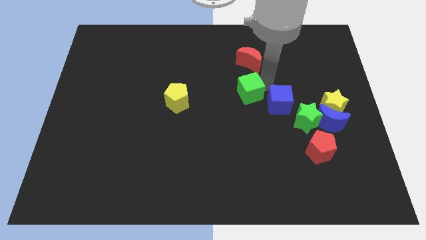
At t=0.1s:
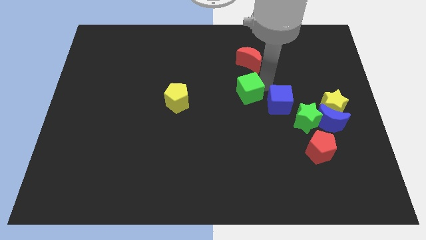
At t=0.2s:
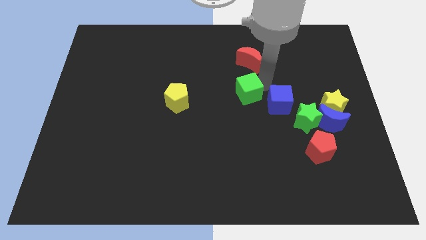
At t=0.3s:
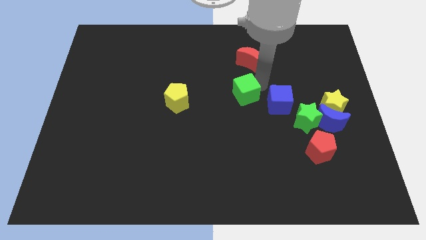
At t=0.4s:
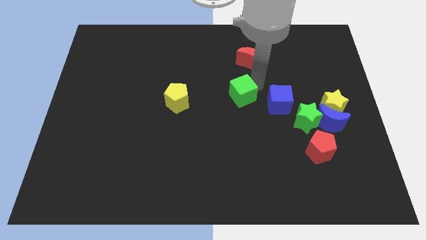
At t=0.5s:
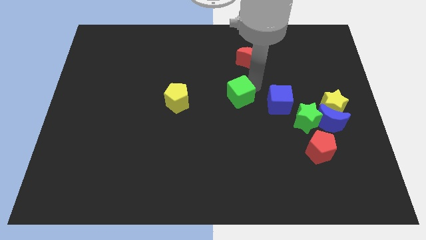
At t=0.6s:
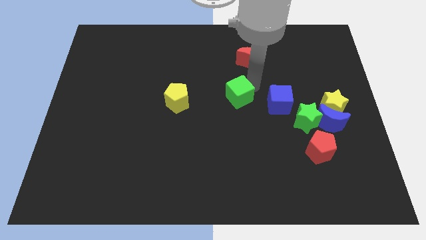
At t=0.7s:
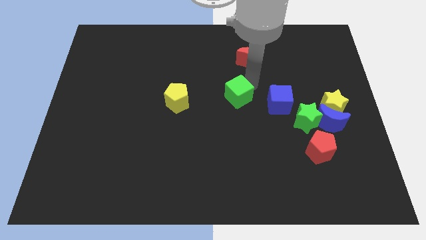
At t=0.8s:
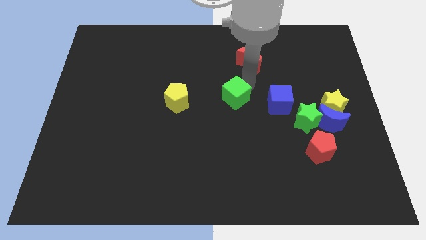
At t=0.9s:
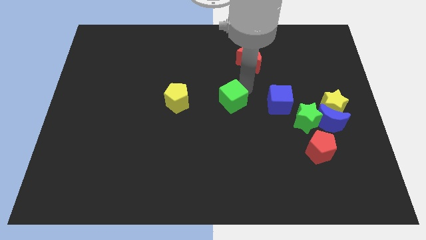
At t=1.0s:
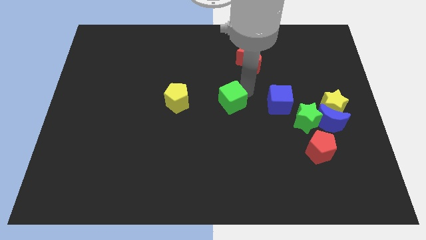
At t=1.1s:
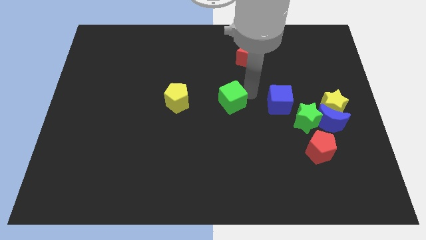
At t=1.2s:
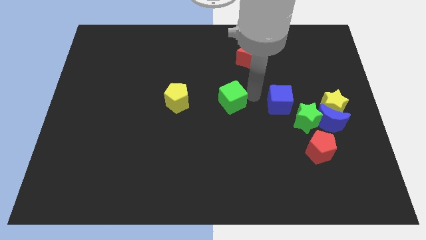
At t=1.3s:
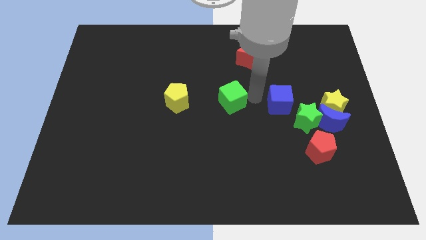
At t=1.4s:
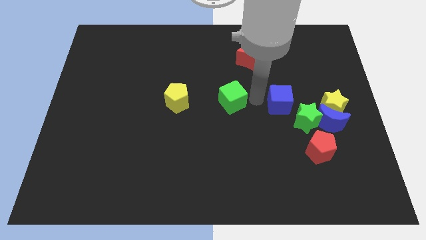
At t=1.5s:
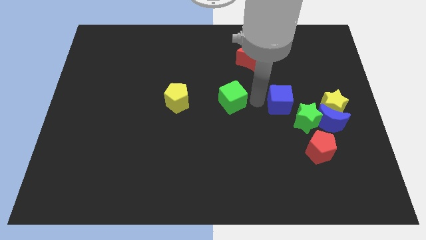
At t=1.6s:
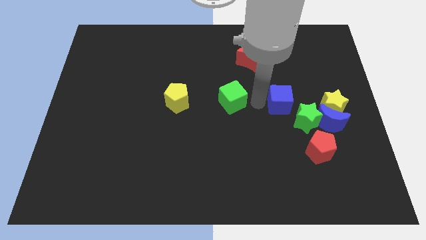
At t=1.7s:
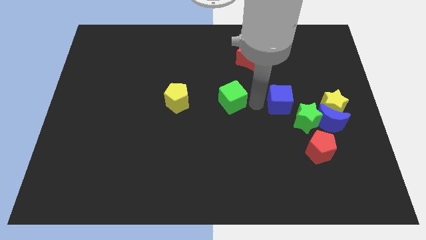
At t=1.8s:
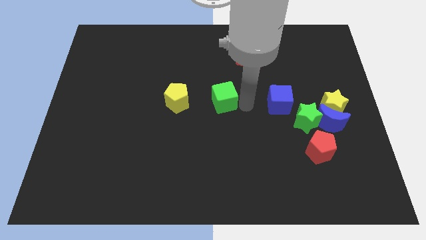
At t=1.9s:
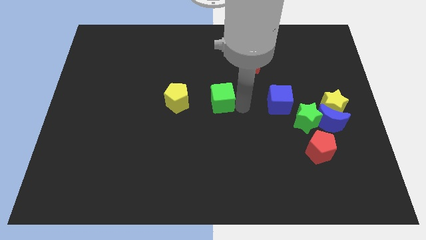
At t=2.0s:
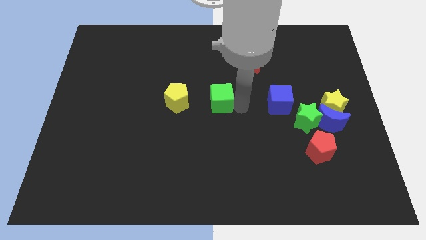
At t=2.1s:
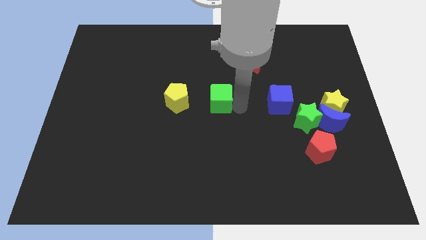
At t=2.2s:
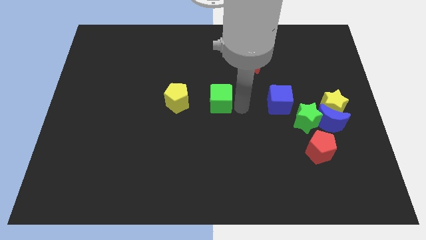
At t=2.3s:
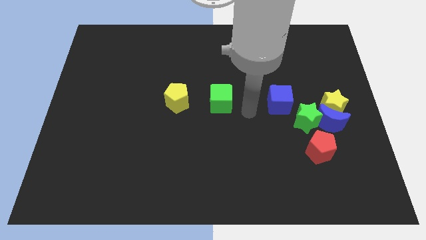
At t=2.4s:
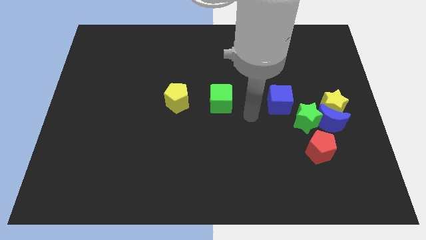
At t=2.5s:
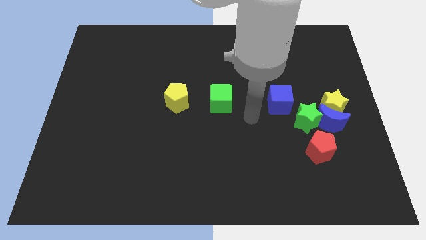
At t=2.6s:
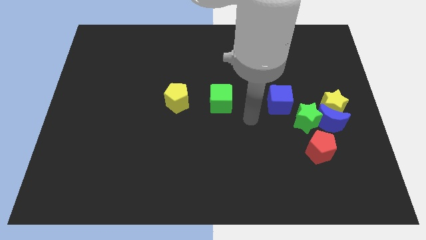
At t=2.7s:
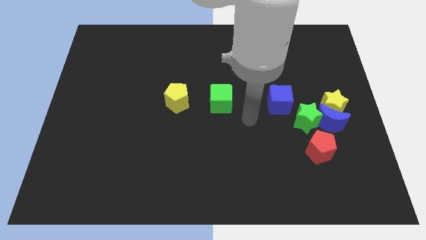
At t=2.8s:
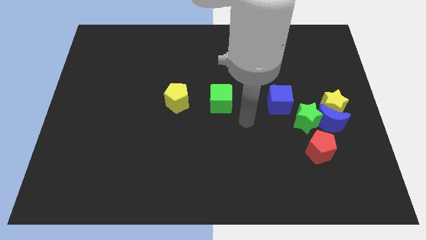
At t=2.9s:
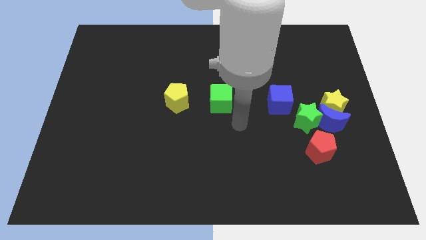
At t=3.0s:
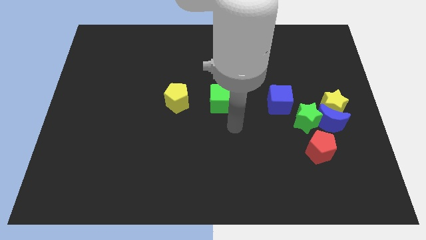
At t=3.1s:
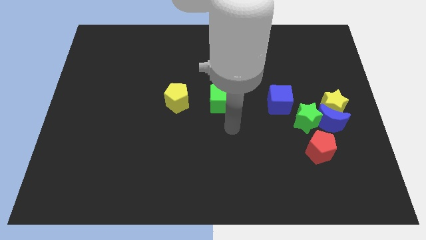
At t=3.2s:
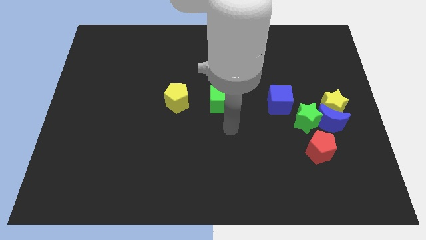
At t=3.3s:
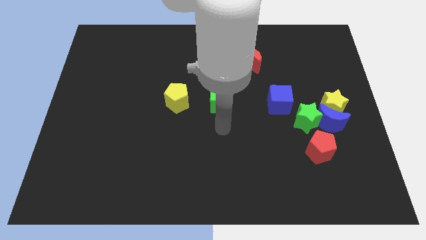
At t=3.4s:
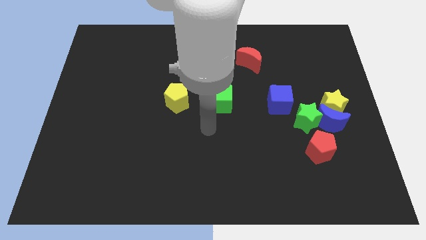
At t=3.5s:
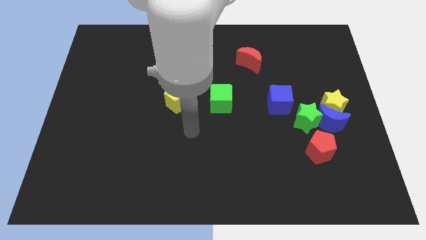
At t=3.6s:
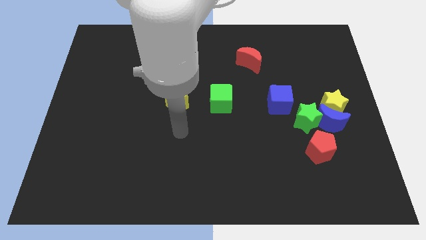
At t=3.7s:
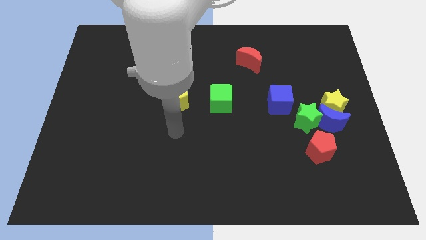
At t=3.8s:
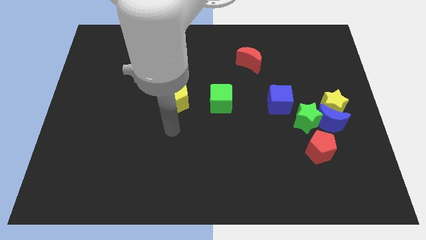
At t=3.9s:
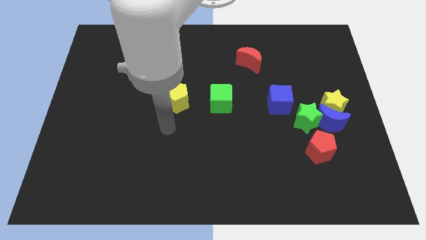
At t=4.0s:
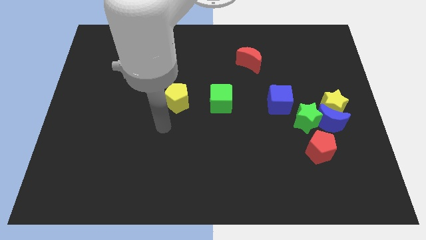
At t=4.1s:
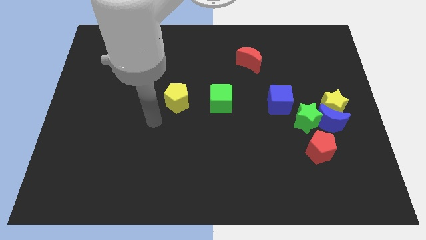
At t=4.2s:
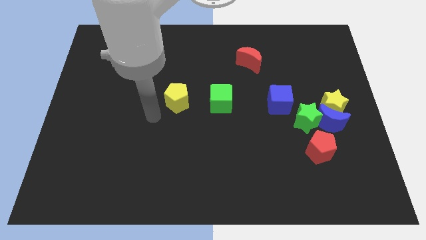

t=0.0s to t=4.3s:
push the green cube to the center of the board

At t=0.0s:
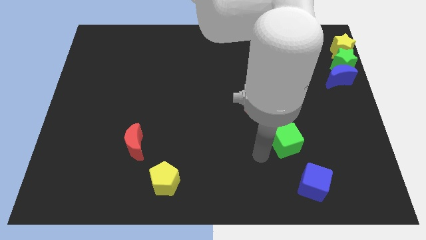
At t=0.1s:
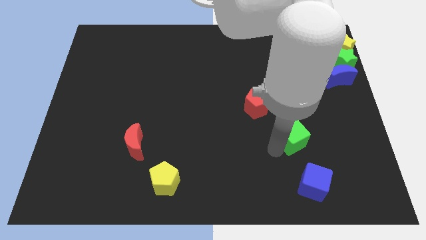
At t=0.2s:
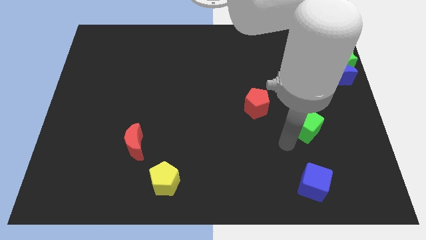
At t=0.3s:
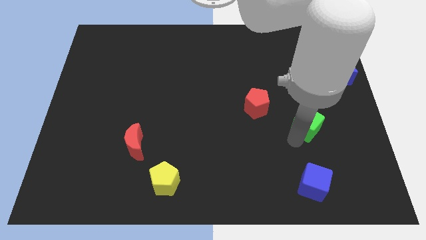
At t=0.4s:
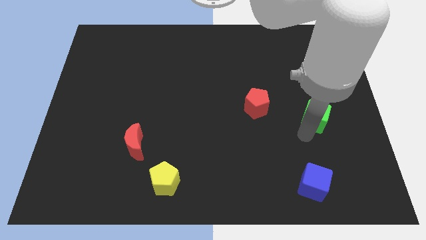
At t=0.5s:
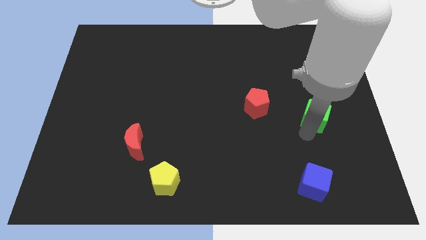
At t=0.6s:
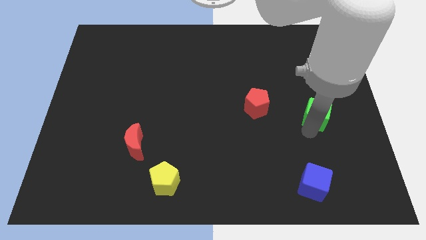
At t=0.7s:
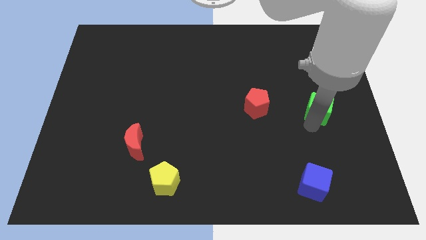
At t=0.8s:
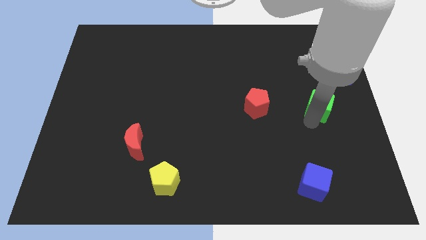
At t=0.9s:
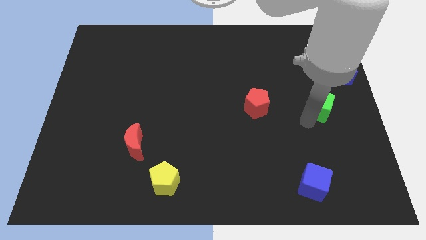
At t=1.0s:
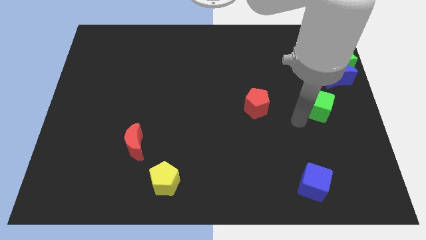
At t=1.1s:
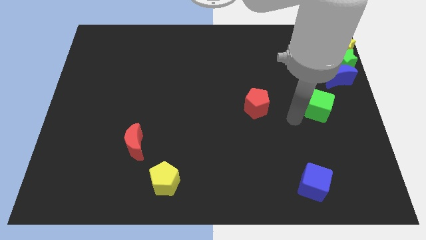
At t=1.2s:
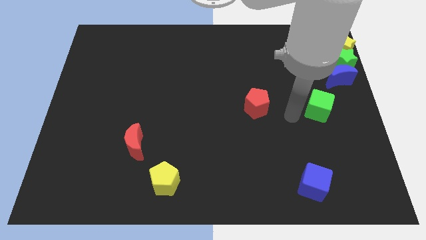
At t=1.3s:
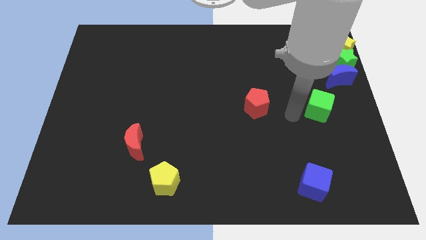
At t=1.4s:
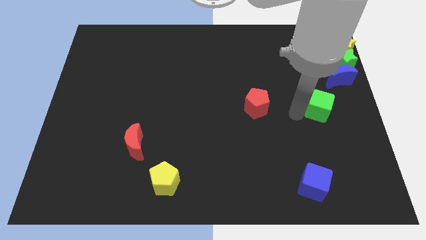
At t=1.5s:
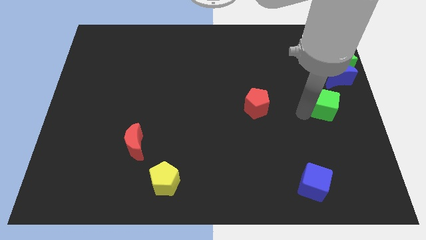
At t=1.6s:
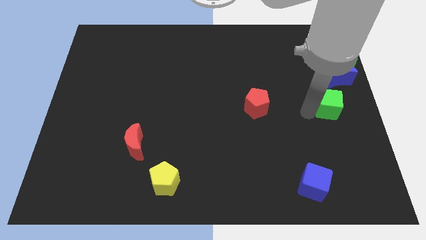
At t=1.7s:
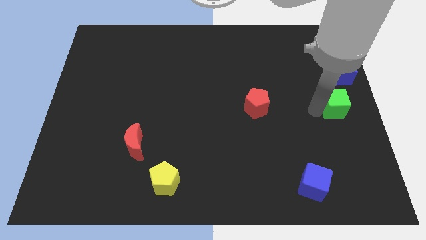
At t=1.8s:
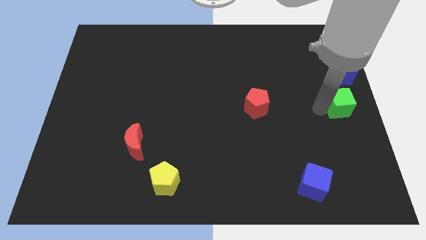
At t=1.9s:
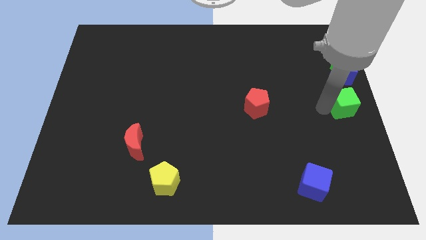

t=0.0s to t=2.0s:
place green cube below the blue crescent

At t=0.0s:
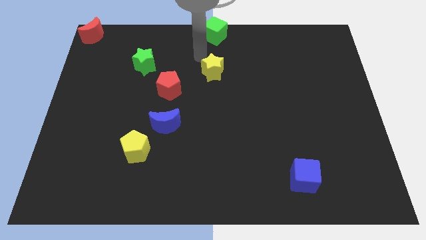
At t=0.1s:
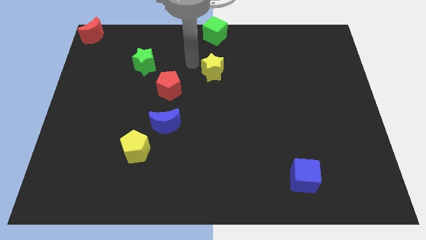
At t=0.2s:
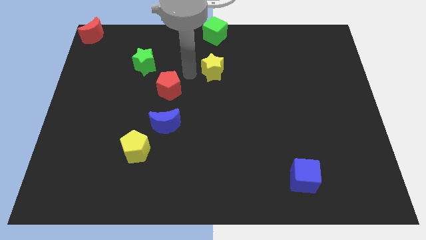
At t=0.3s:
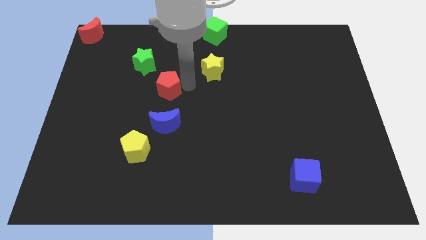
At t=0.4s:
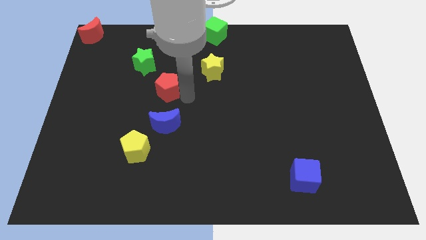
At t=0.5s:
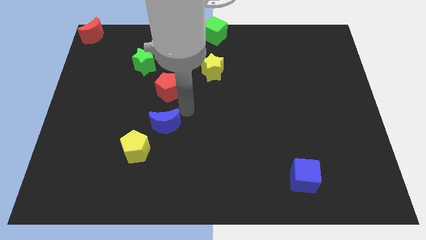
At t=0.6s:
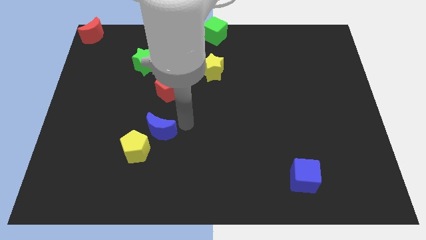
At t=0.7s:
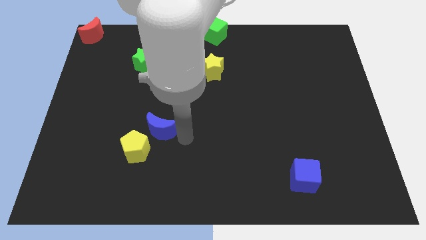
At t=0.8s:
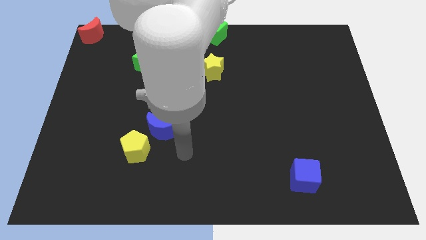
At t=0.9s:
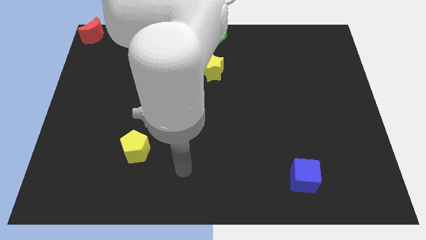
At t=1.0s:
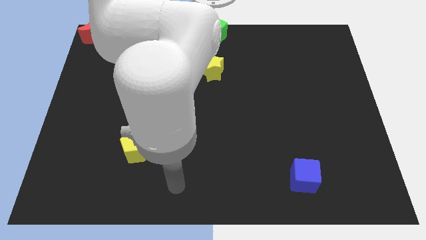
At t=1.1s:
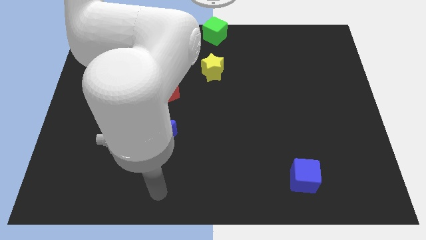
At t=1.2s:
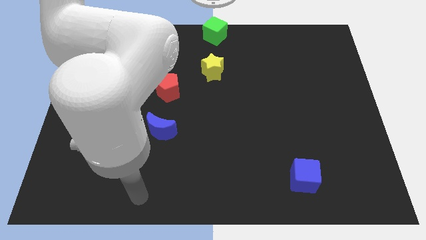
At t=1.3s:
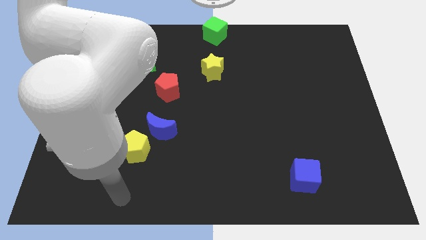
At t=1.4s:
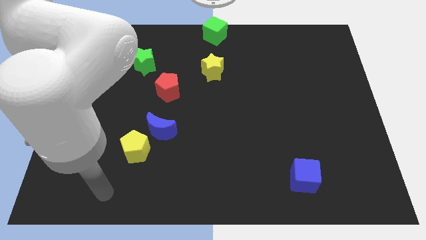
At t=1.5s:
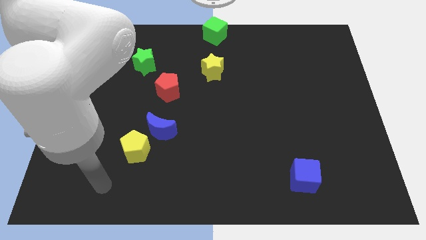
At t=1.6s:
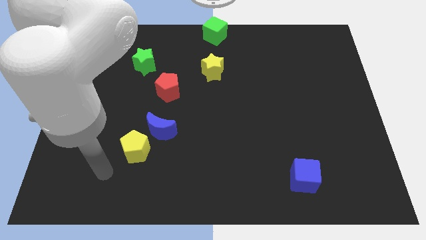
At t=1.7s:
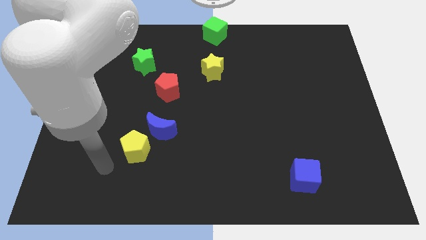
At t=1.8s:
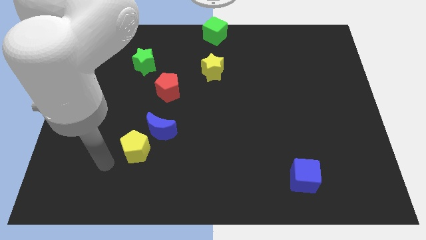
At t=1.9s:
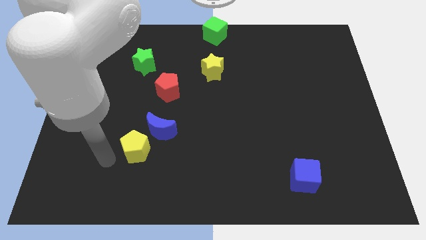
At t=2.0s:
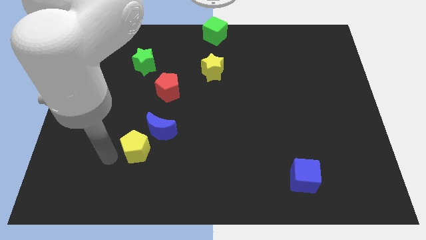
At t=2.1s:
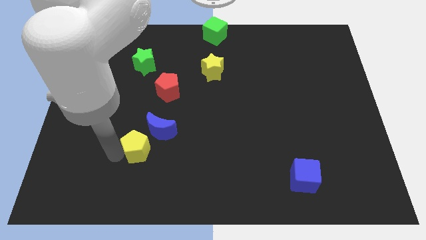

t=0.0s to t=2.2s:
touch the left side of the yellow pentagon

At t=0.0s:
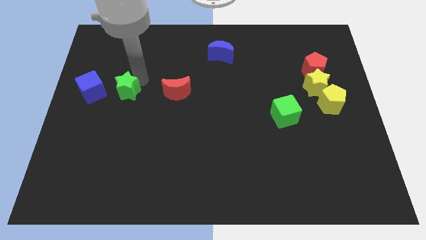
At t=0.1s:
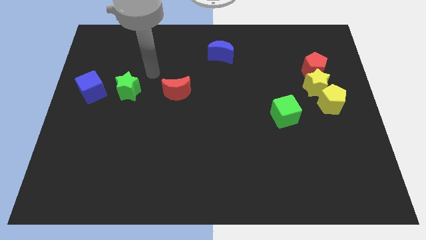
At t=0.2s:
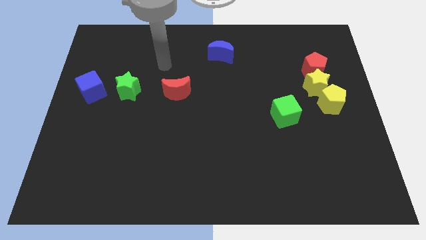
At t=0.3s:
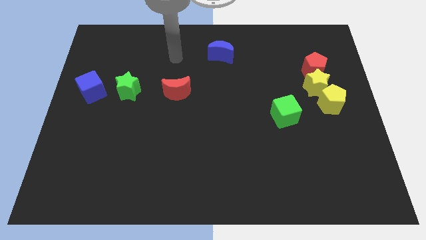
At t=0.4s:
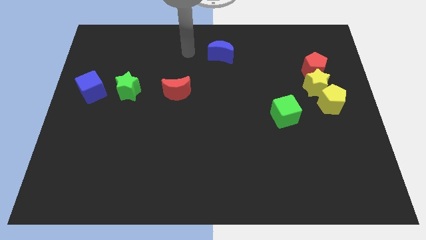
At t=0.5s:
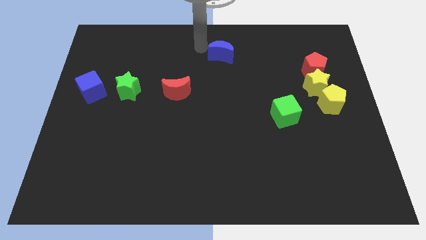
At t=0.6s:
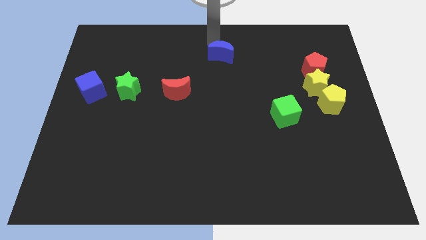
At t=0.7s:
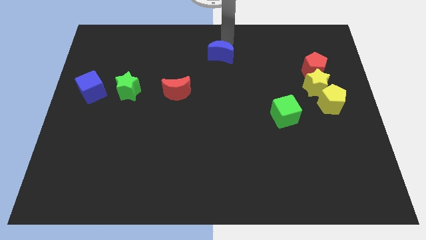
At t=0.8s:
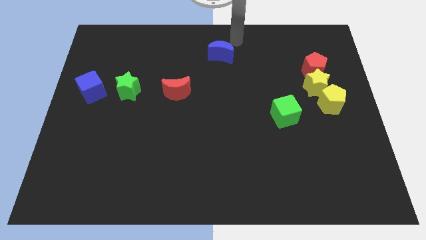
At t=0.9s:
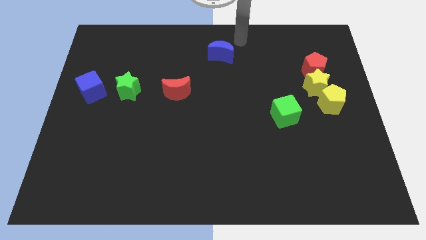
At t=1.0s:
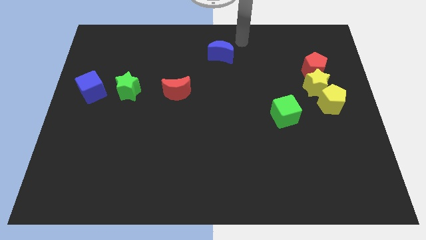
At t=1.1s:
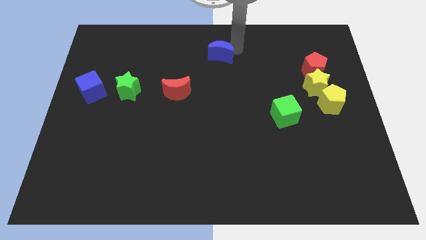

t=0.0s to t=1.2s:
move your arm at the top of blue crescent
